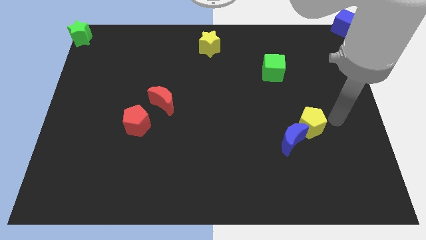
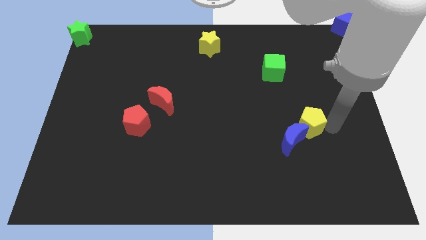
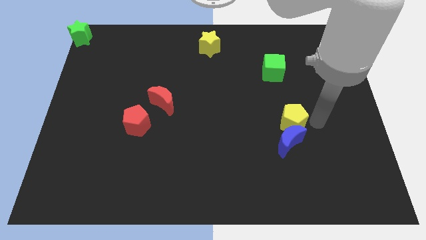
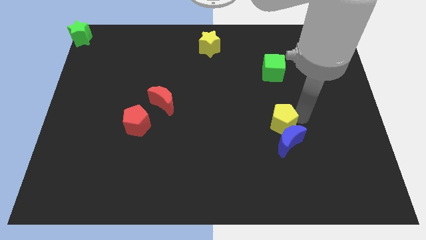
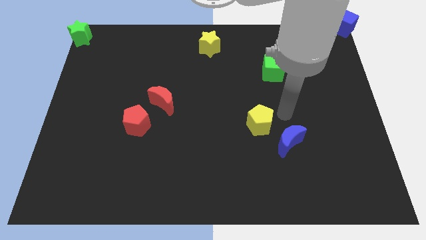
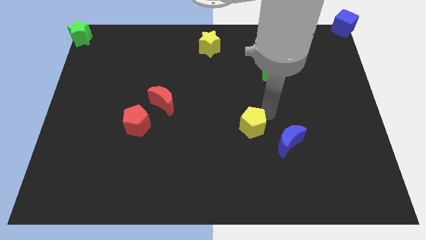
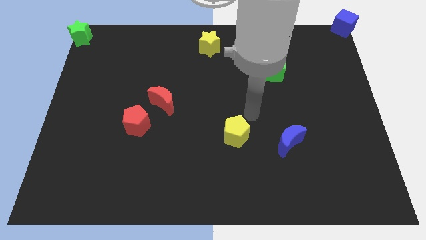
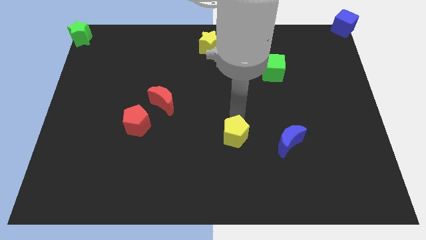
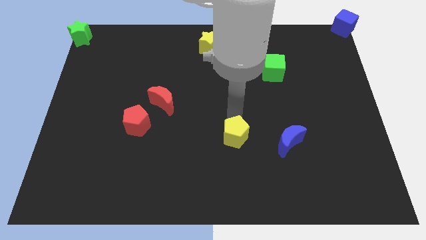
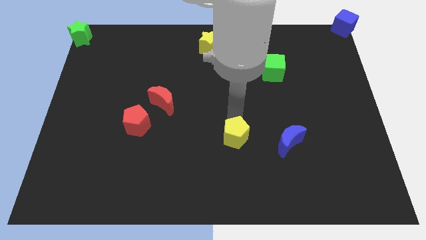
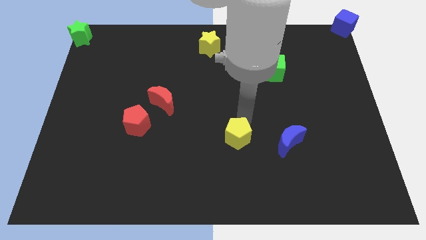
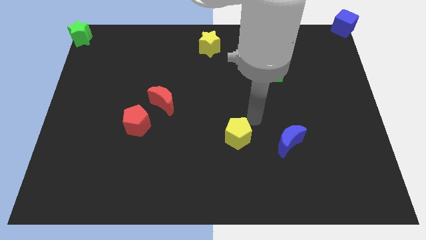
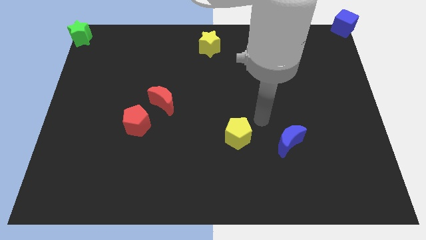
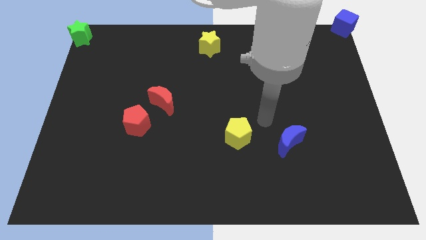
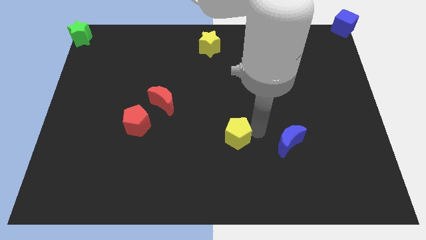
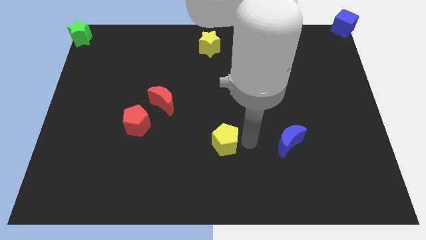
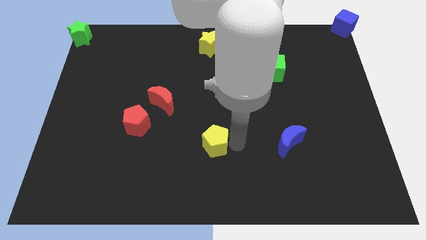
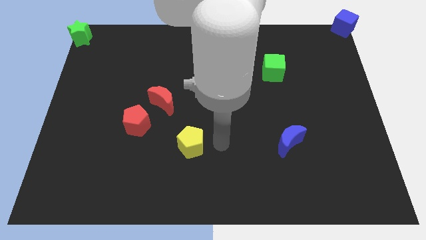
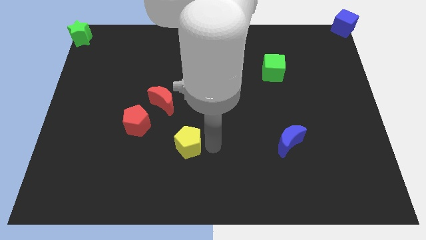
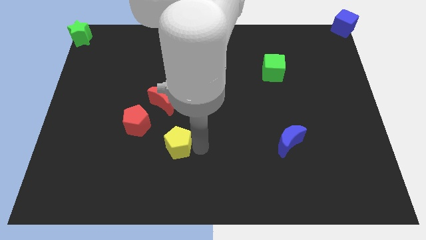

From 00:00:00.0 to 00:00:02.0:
move the yellow pentagon near the red pentagon

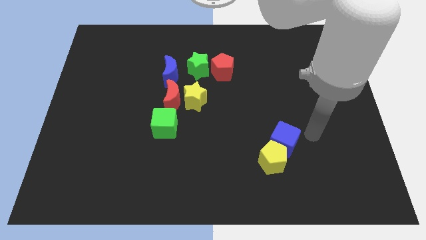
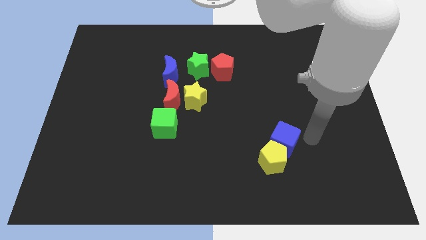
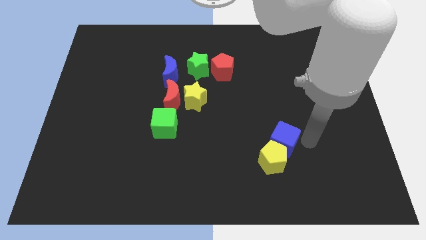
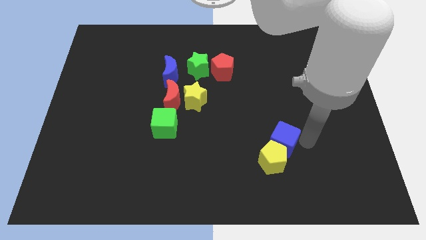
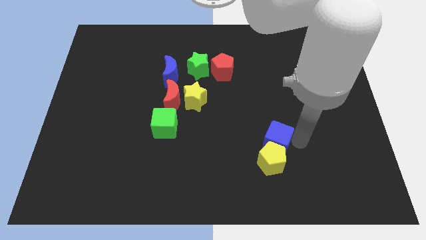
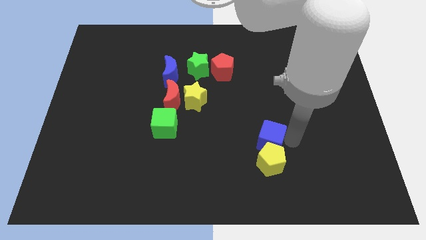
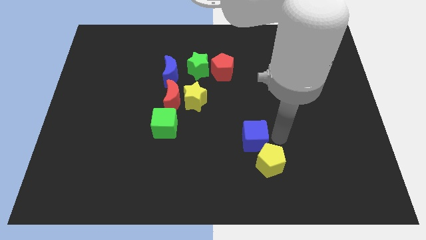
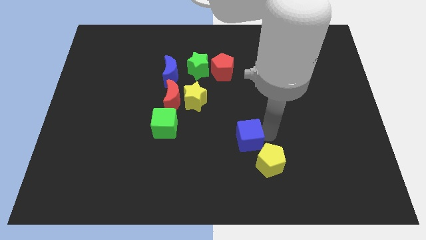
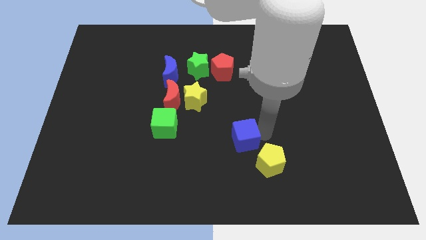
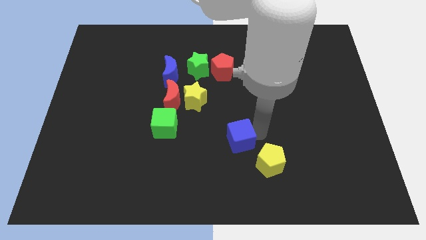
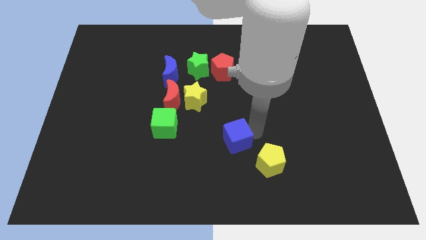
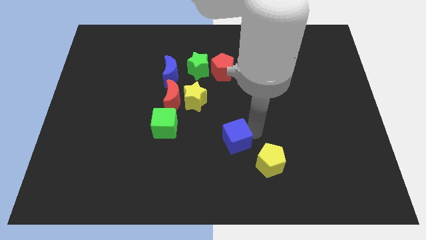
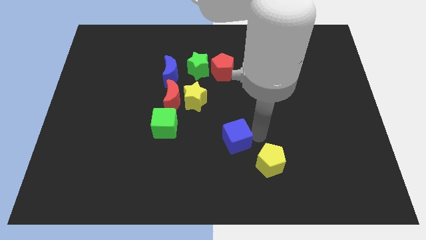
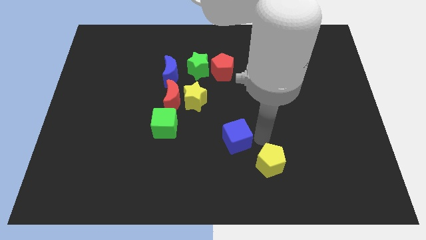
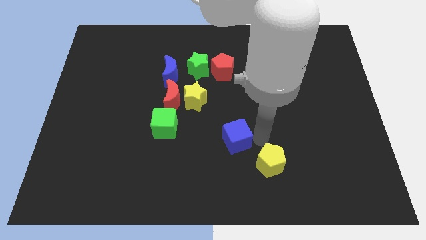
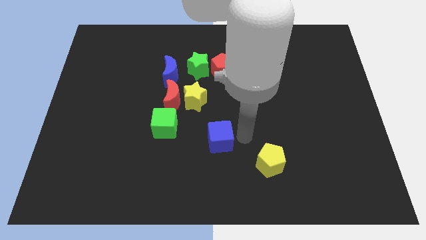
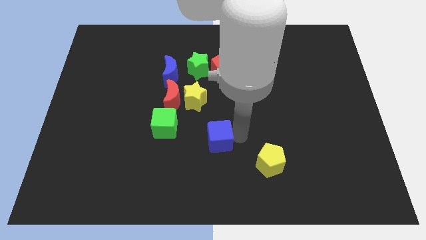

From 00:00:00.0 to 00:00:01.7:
separate the blue cube and yellow pentagon

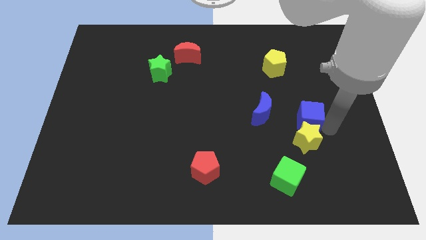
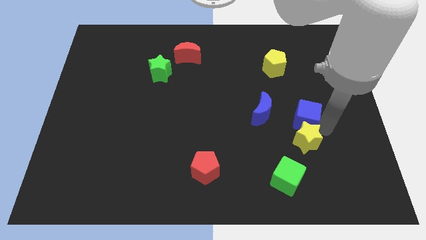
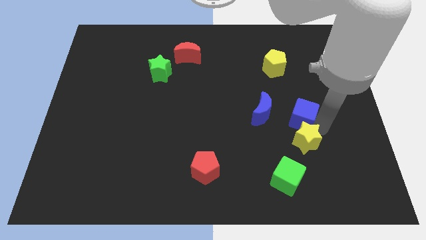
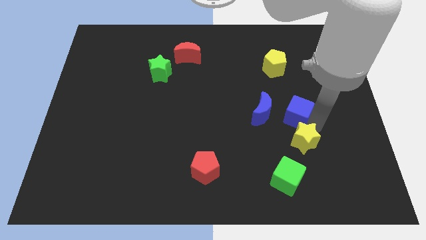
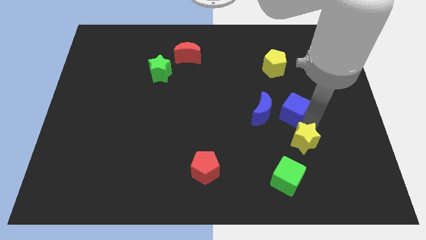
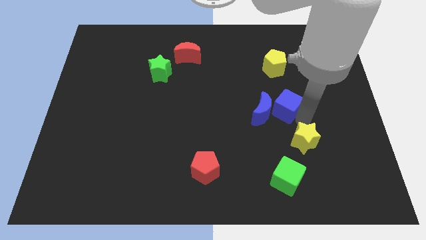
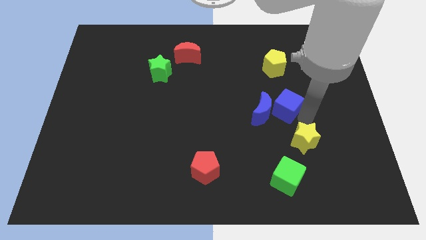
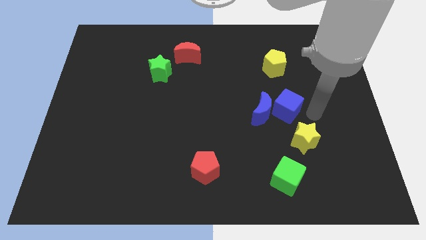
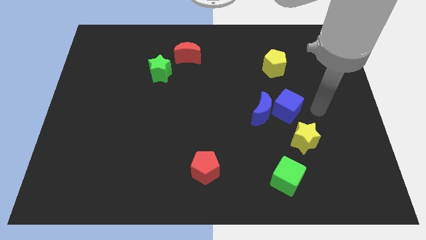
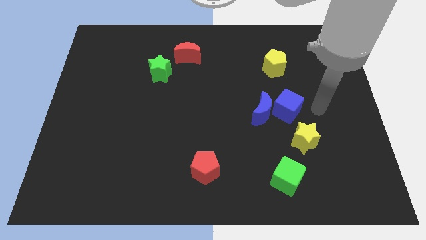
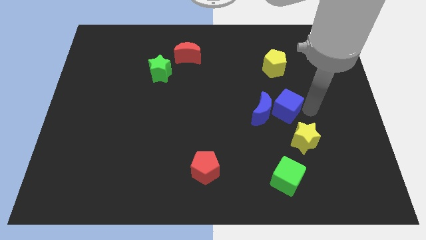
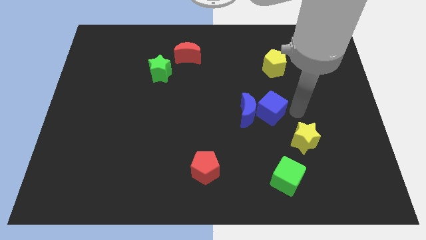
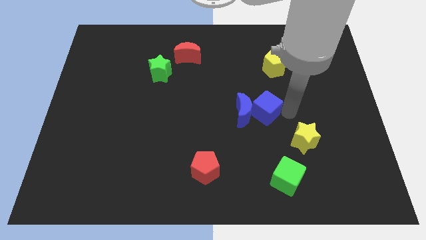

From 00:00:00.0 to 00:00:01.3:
push the blue cube into the blue moon

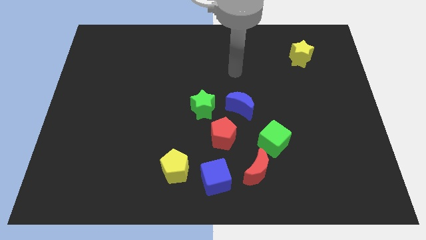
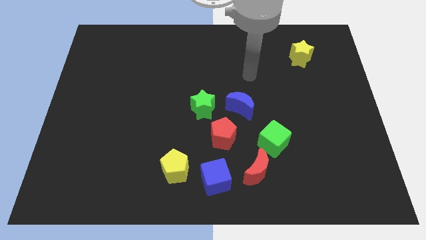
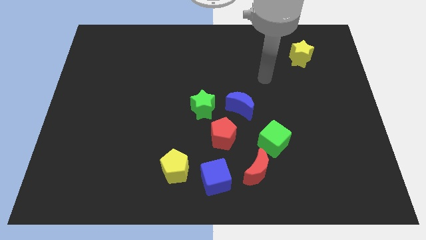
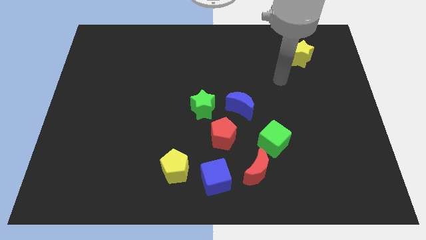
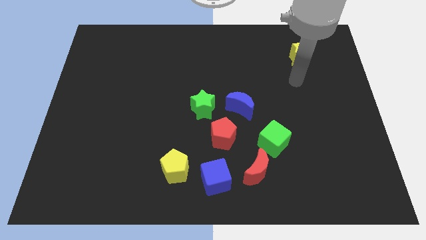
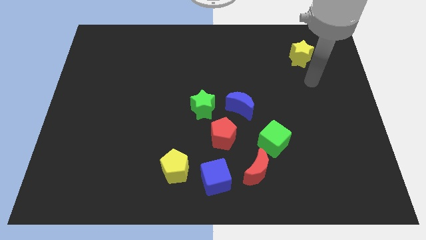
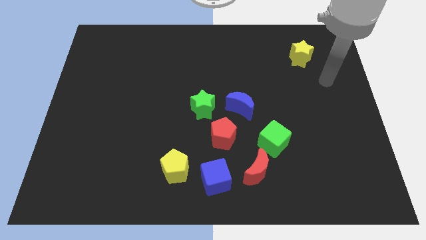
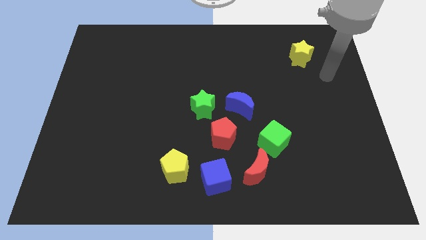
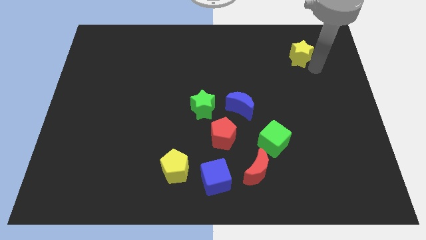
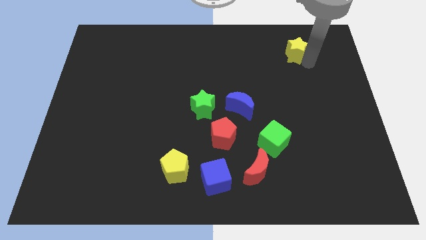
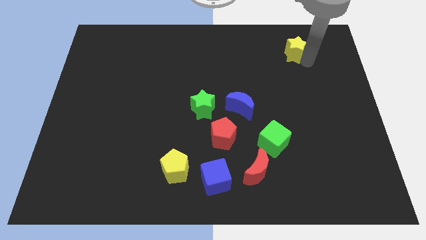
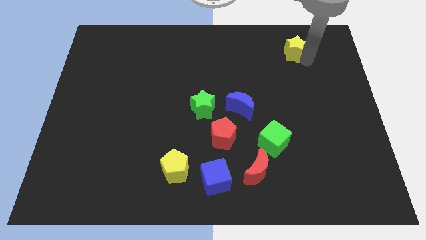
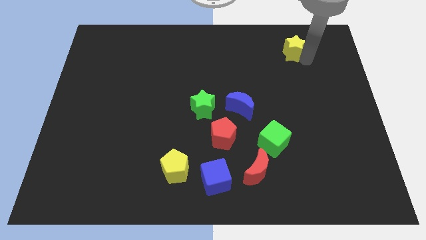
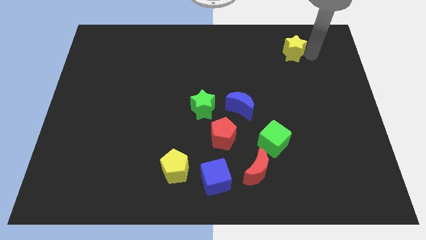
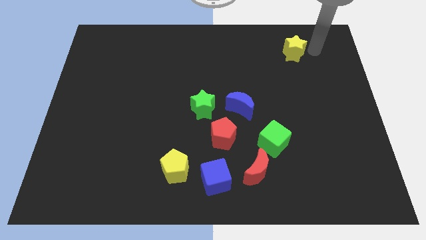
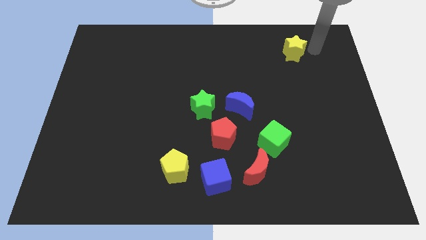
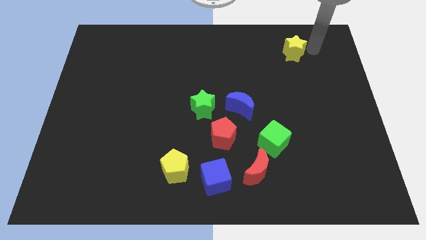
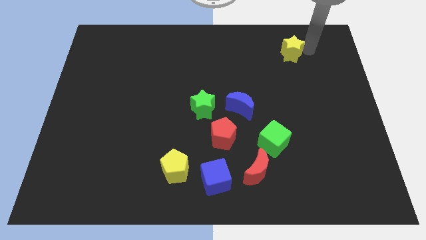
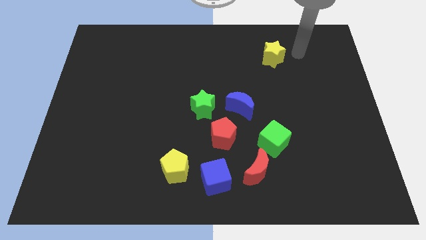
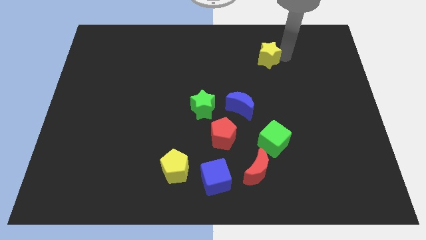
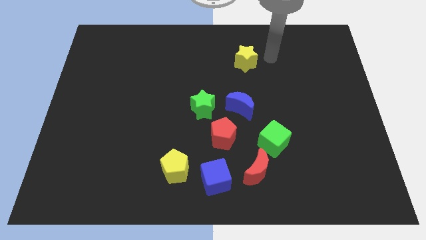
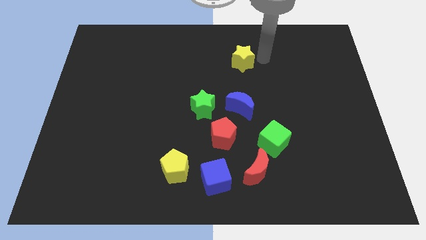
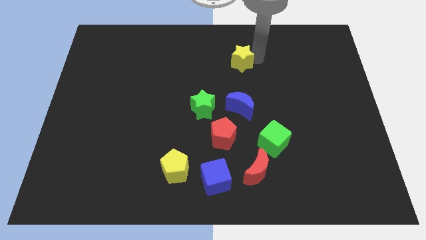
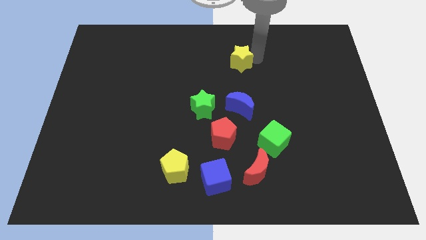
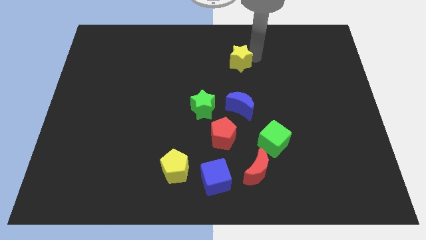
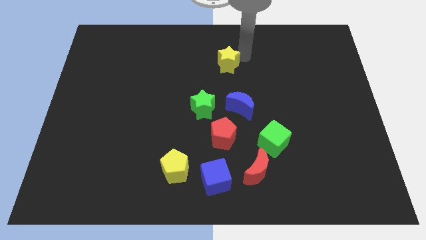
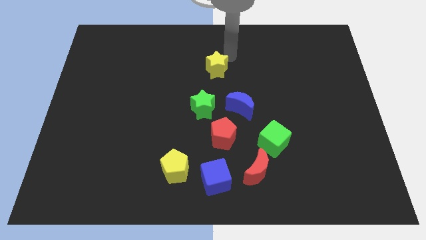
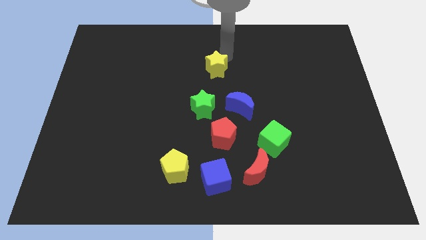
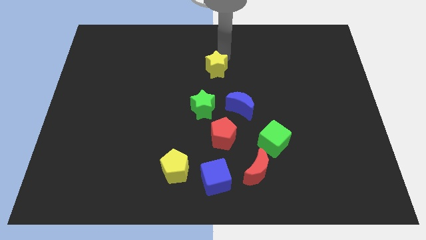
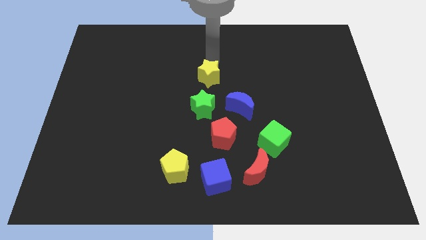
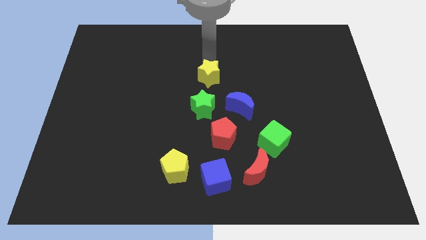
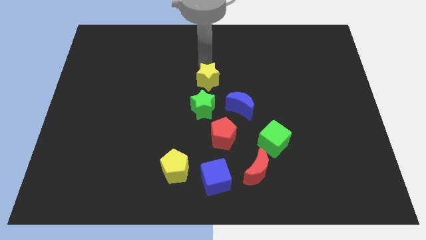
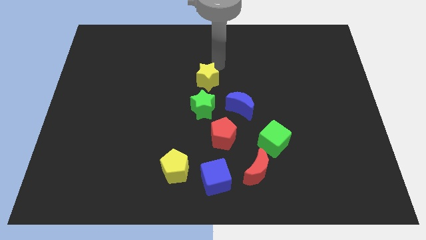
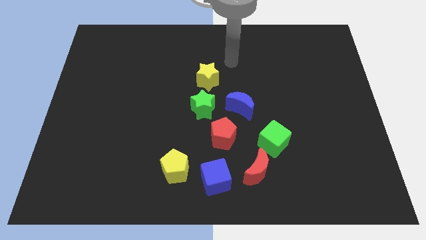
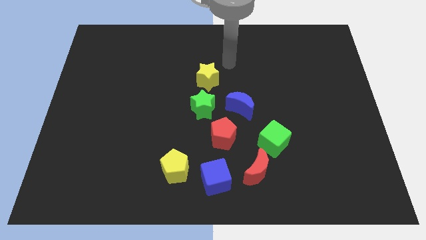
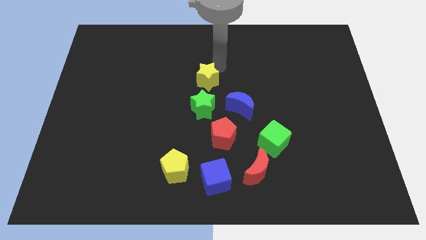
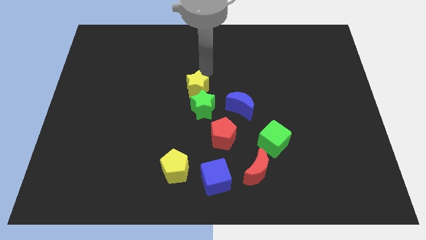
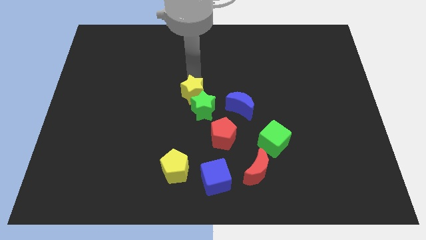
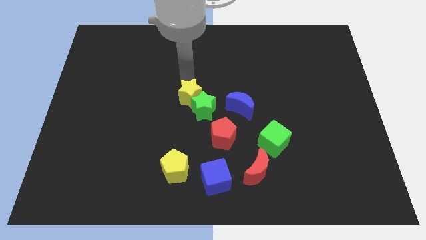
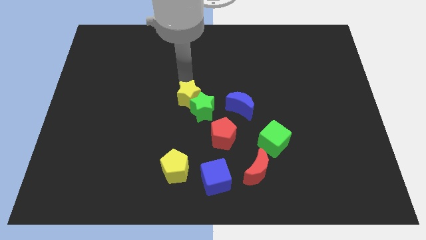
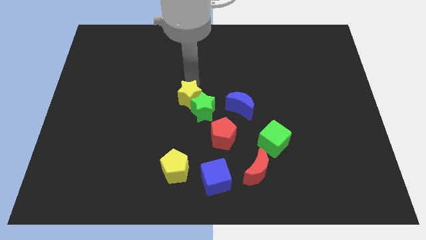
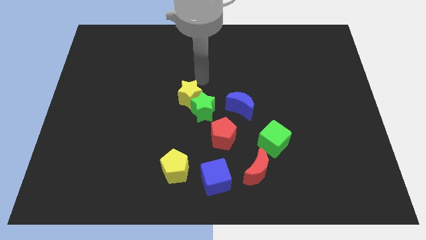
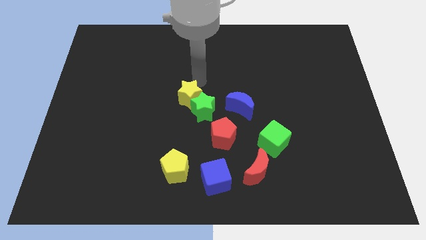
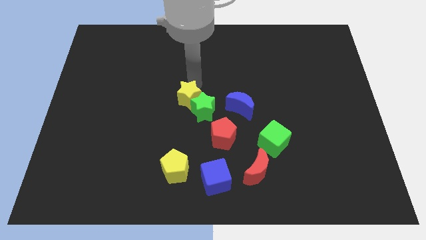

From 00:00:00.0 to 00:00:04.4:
slide the yellow star into the green star
